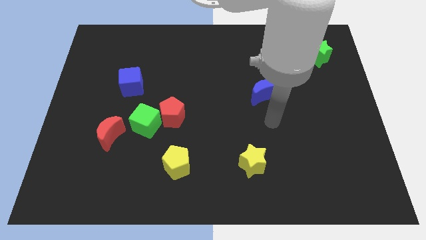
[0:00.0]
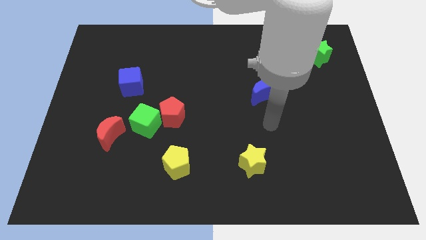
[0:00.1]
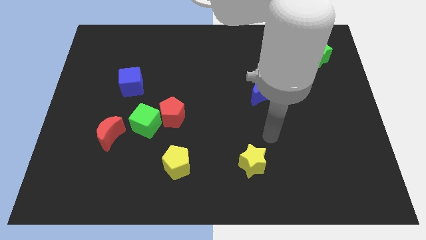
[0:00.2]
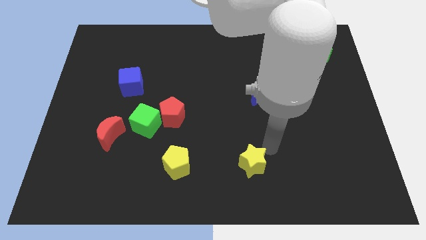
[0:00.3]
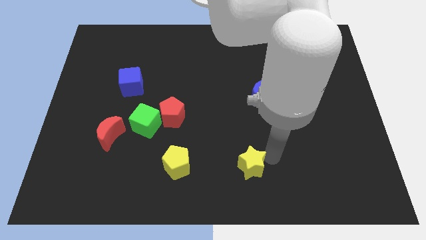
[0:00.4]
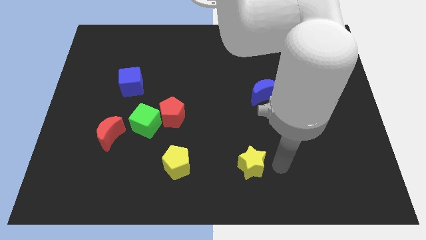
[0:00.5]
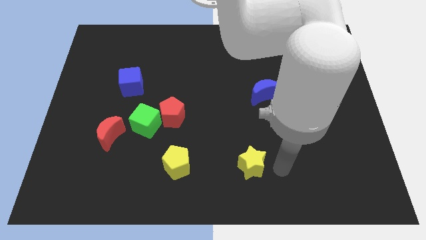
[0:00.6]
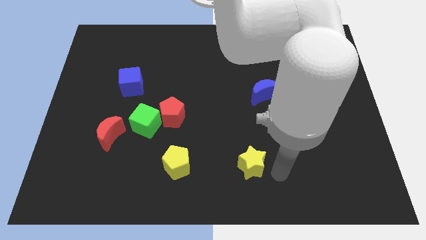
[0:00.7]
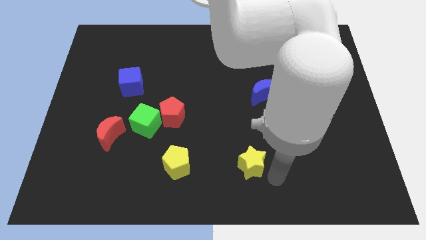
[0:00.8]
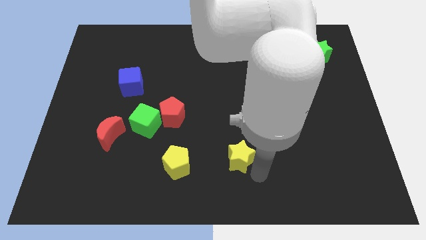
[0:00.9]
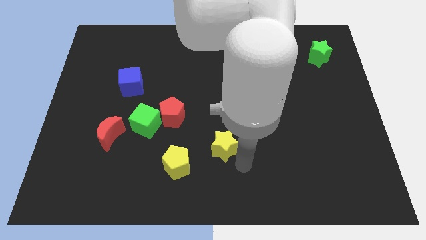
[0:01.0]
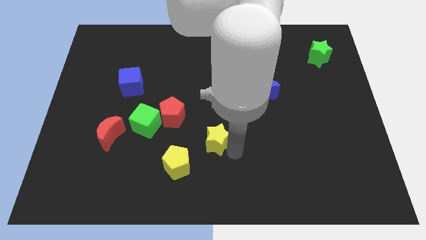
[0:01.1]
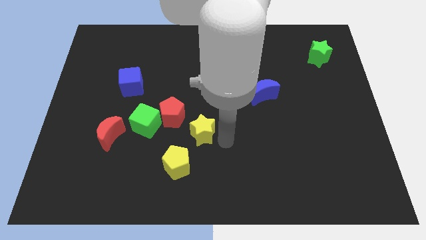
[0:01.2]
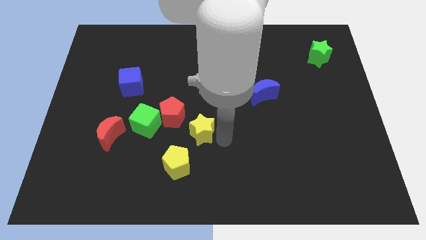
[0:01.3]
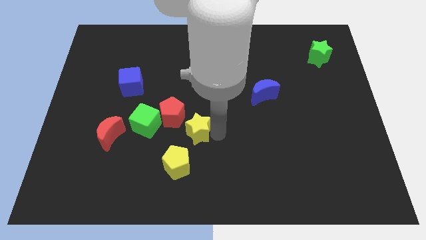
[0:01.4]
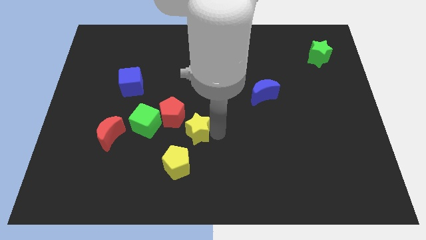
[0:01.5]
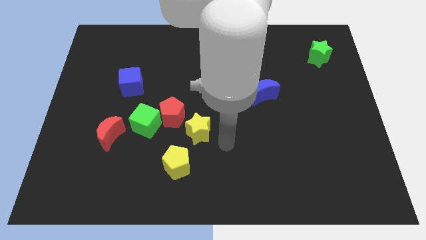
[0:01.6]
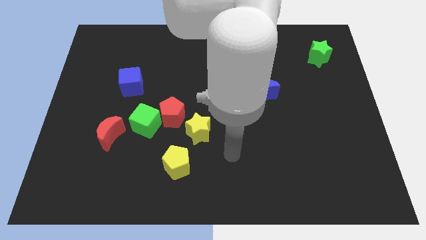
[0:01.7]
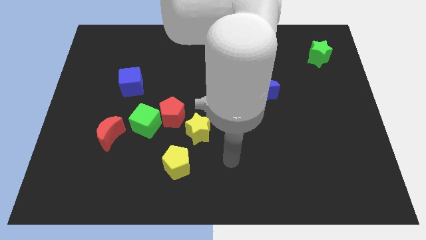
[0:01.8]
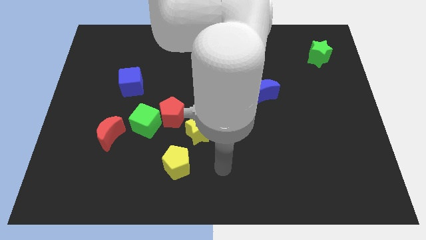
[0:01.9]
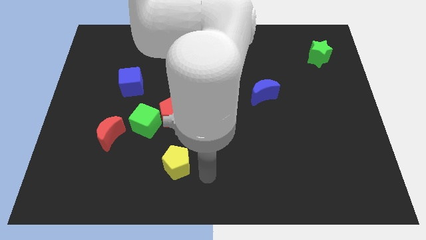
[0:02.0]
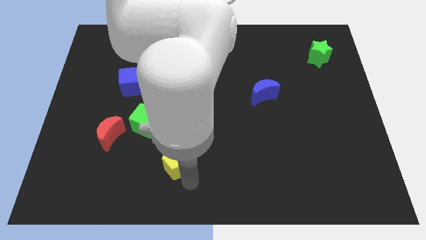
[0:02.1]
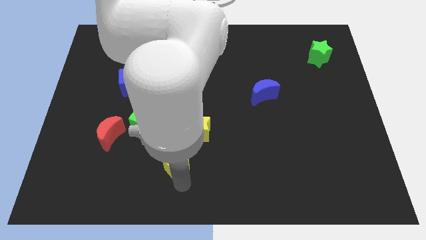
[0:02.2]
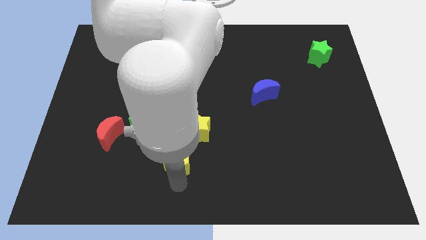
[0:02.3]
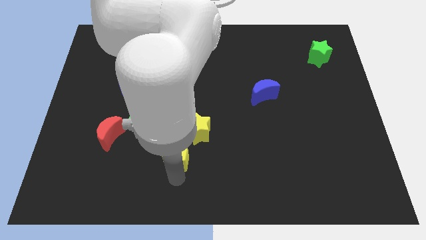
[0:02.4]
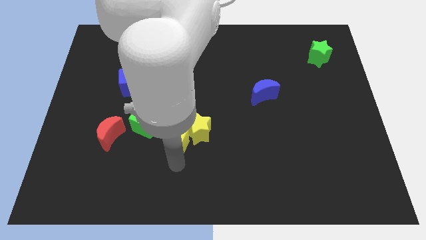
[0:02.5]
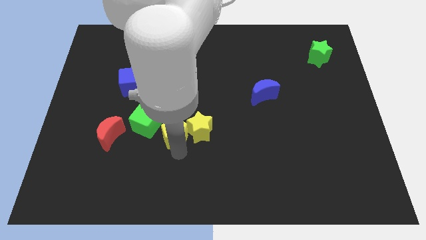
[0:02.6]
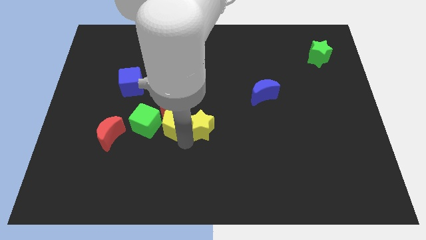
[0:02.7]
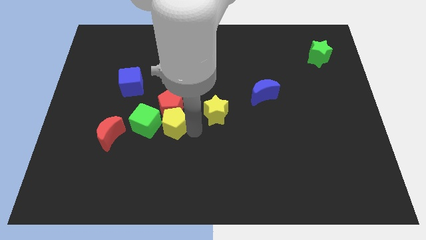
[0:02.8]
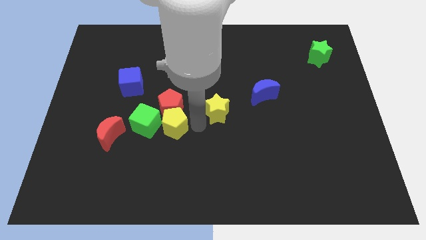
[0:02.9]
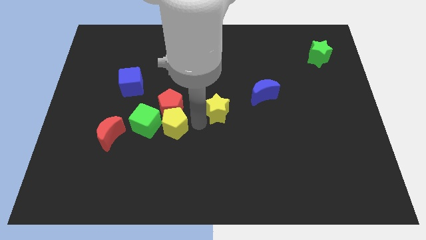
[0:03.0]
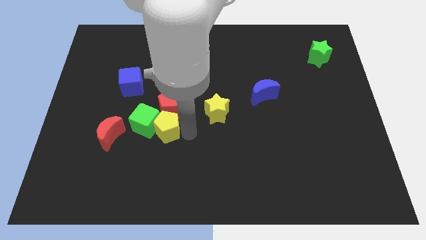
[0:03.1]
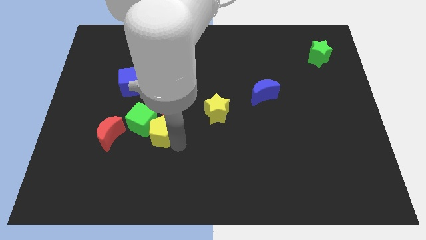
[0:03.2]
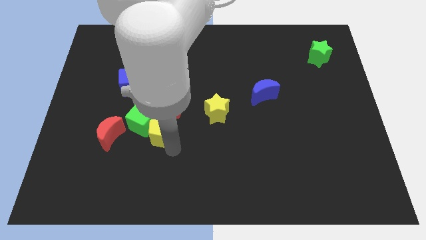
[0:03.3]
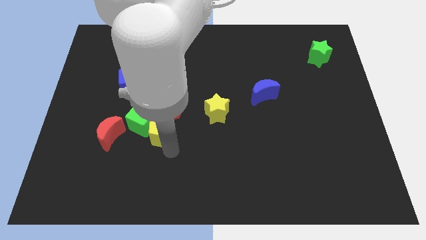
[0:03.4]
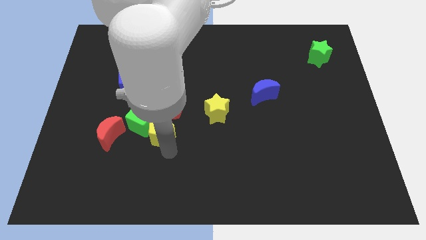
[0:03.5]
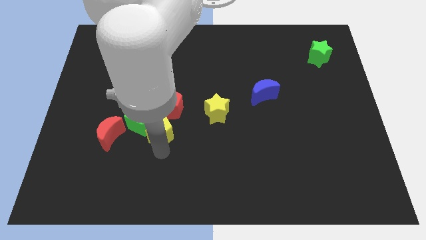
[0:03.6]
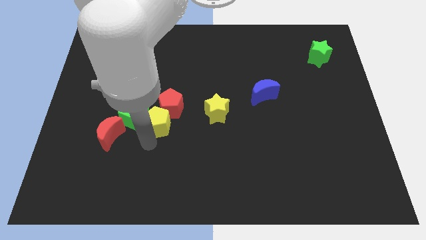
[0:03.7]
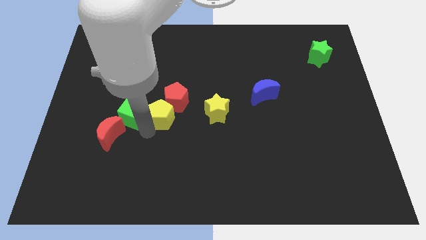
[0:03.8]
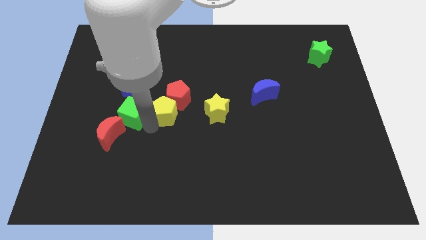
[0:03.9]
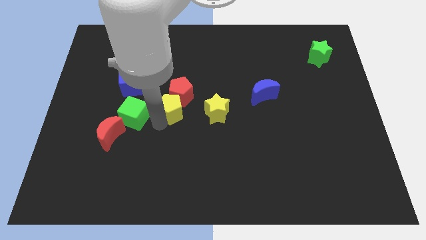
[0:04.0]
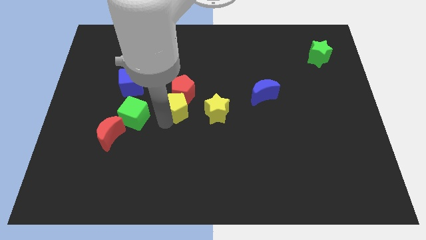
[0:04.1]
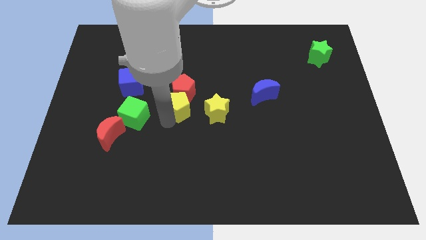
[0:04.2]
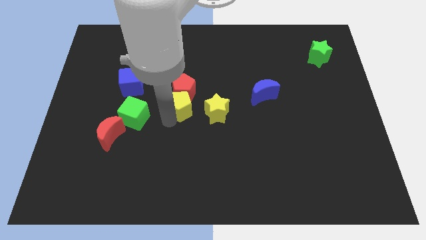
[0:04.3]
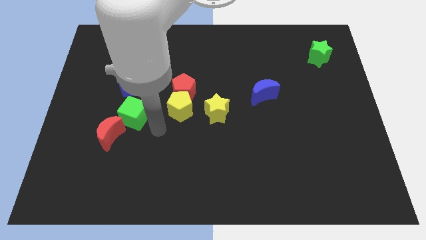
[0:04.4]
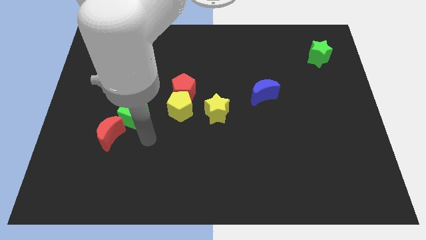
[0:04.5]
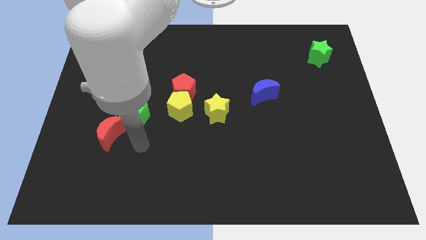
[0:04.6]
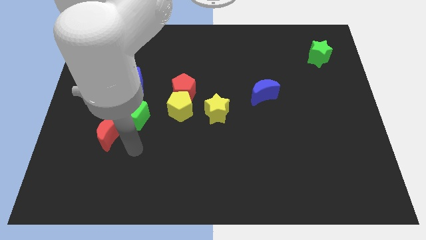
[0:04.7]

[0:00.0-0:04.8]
push the yellow star and yellow pentagon into the red pentagon

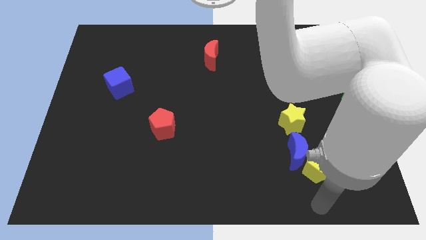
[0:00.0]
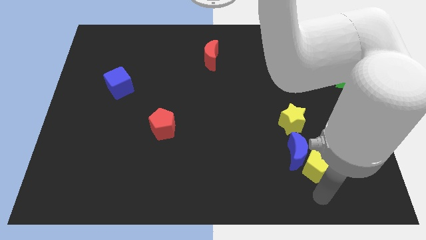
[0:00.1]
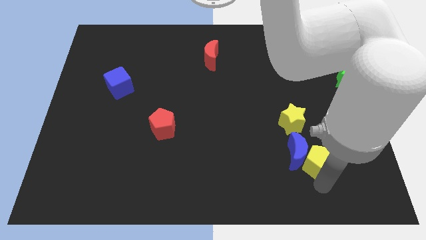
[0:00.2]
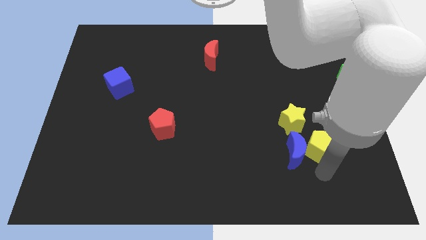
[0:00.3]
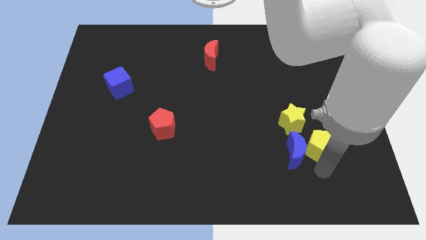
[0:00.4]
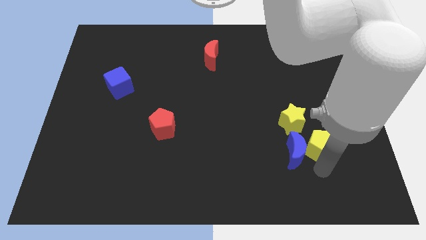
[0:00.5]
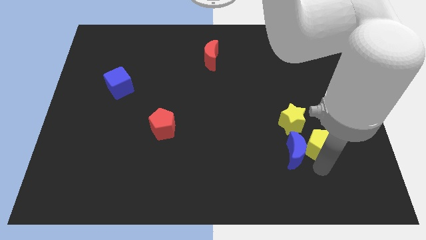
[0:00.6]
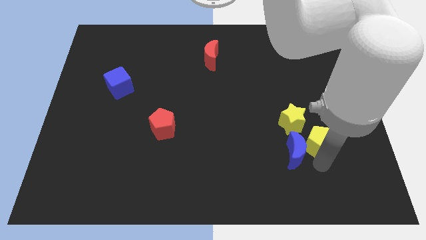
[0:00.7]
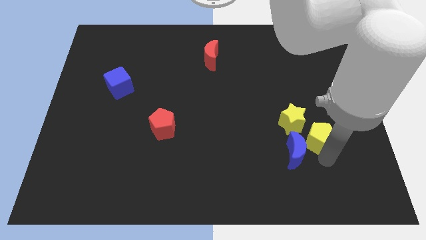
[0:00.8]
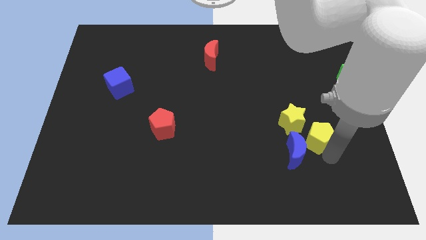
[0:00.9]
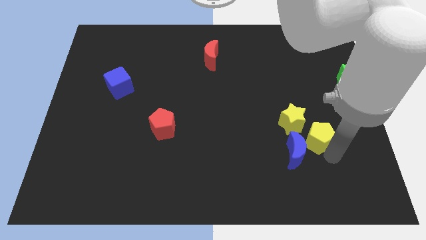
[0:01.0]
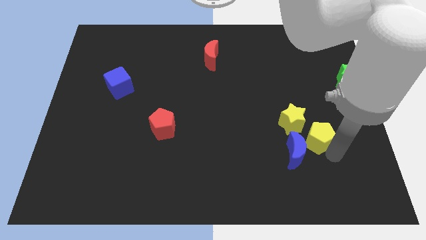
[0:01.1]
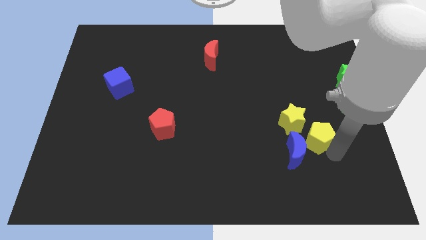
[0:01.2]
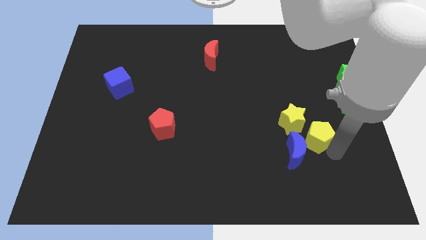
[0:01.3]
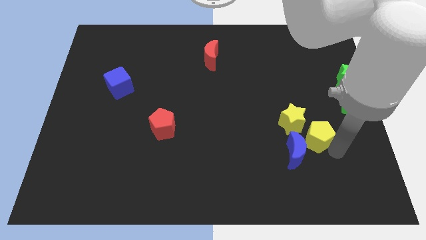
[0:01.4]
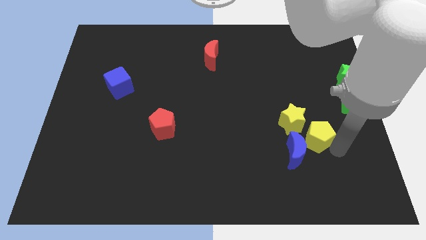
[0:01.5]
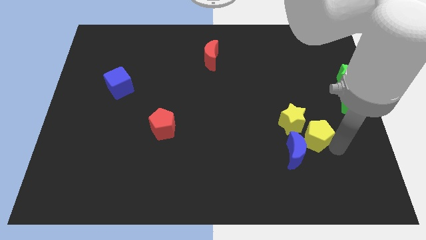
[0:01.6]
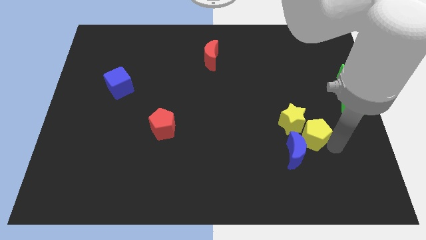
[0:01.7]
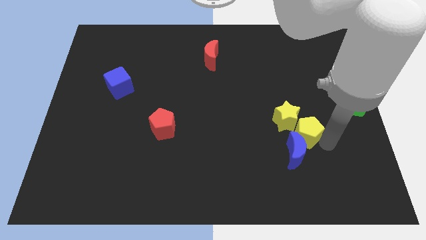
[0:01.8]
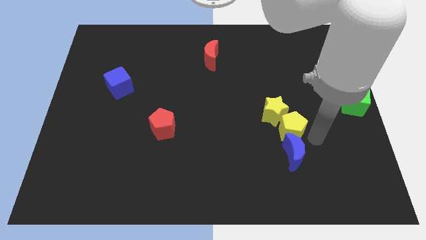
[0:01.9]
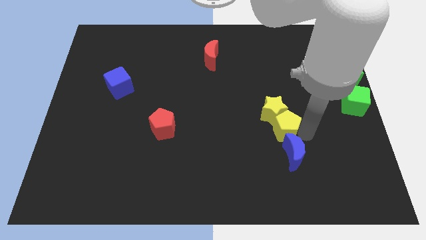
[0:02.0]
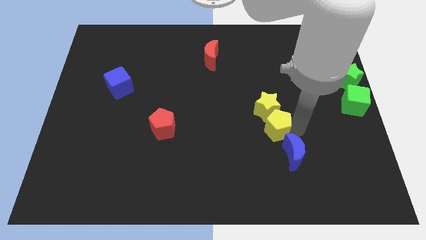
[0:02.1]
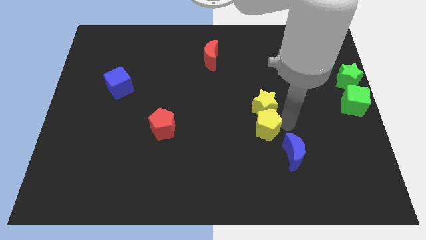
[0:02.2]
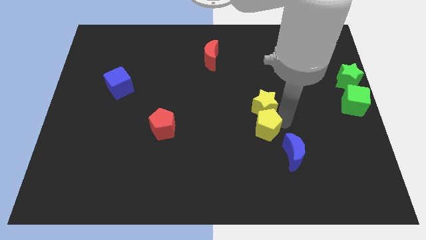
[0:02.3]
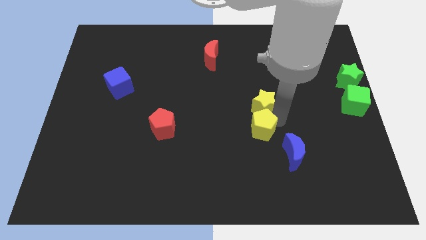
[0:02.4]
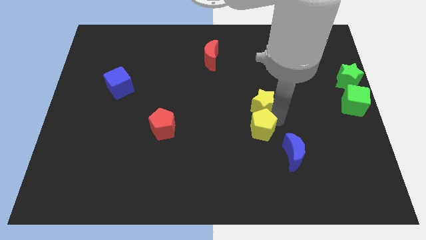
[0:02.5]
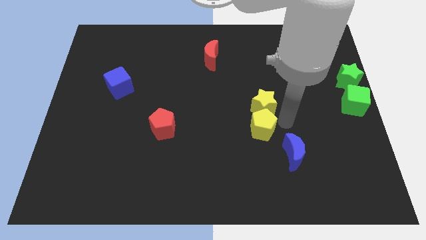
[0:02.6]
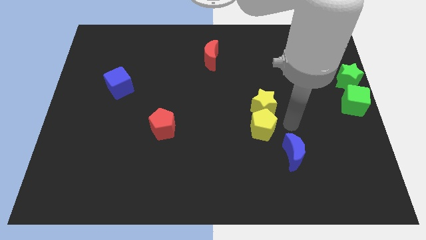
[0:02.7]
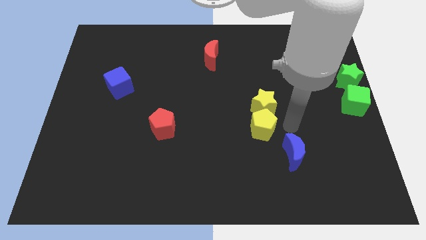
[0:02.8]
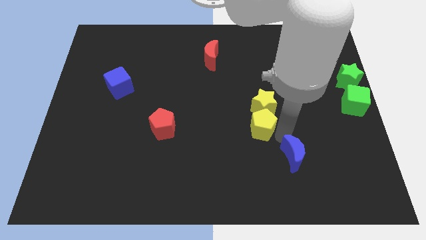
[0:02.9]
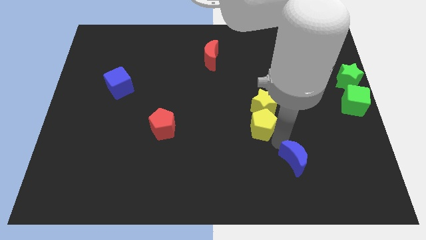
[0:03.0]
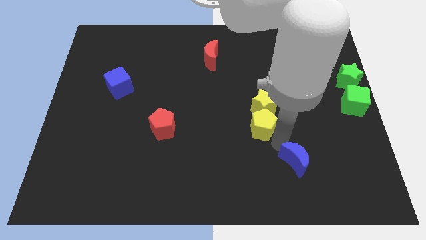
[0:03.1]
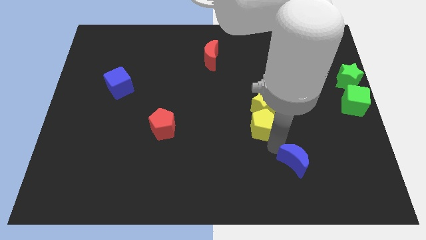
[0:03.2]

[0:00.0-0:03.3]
slide the yellow pentagon to the bottom side of the yellow star

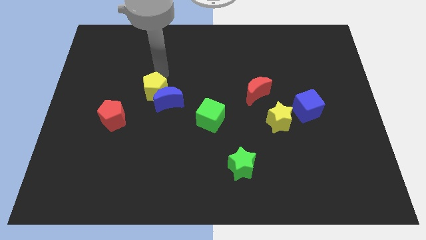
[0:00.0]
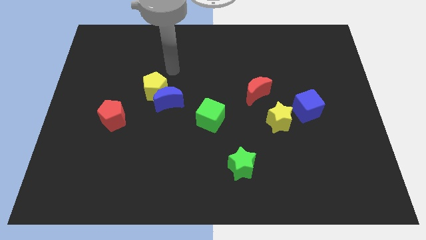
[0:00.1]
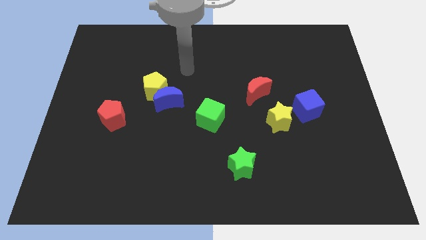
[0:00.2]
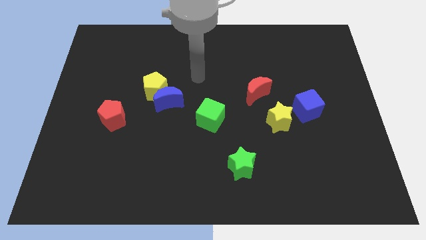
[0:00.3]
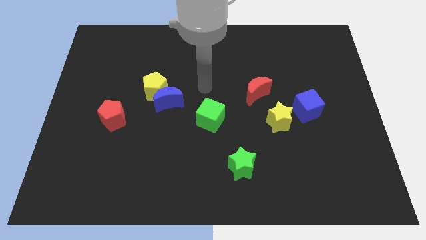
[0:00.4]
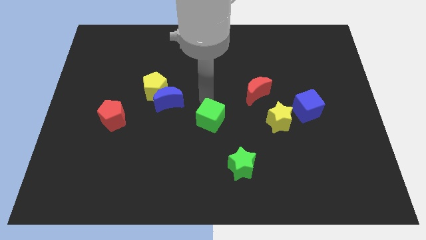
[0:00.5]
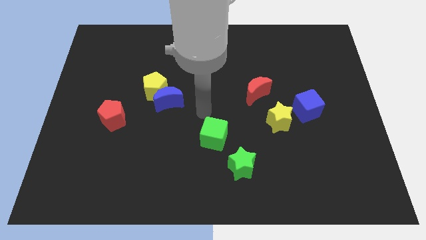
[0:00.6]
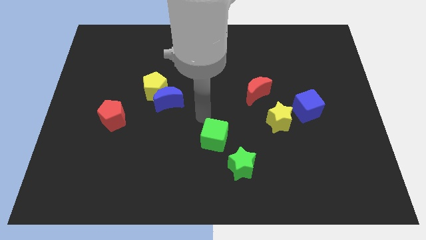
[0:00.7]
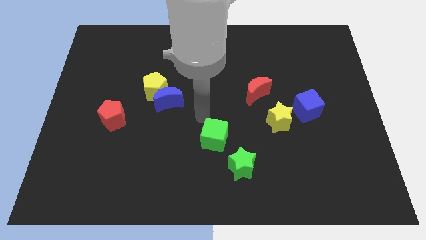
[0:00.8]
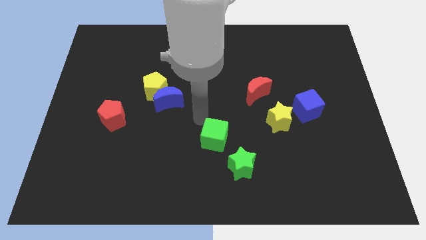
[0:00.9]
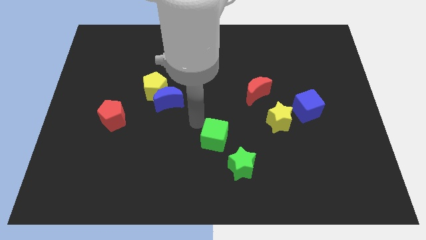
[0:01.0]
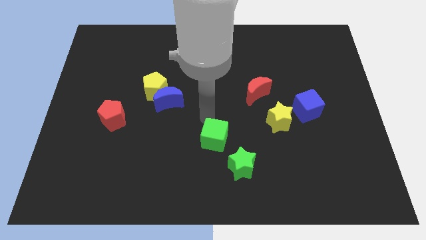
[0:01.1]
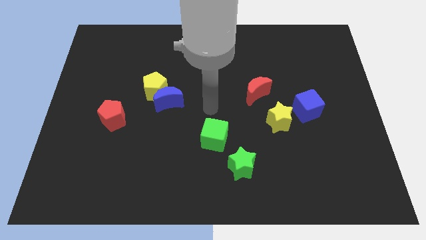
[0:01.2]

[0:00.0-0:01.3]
move the green cube to the bottom slightly
